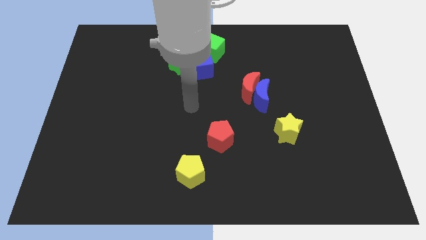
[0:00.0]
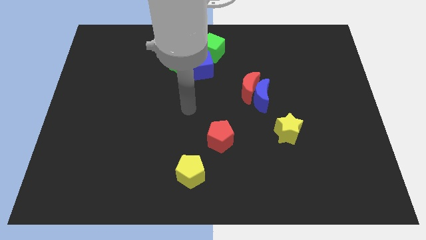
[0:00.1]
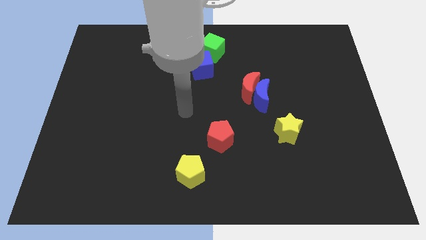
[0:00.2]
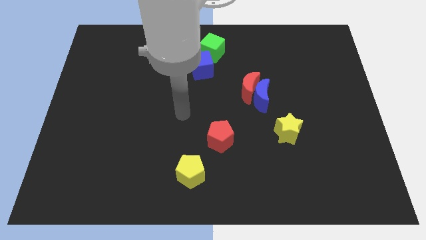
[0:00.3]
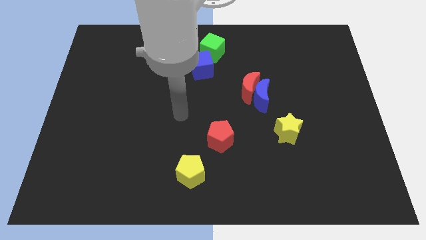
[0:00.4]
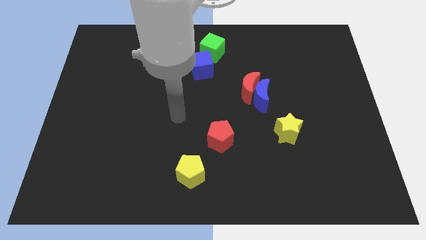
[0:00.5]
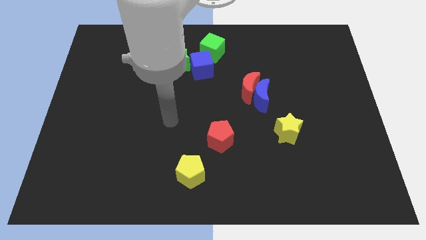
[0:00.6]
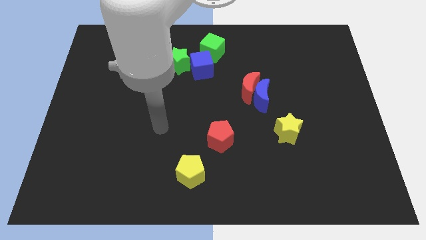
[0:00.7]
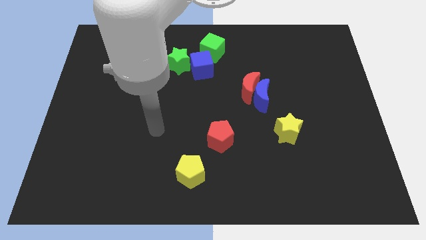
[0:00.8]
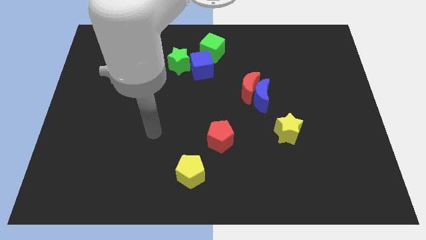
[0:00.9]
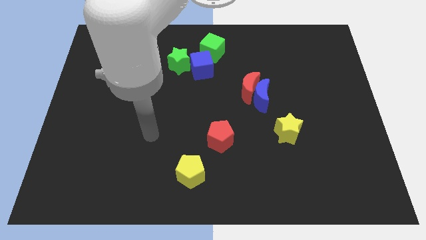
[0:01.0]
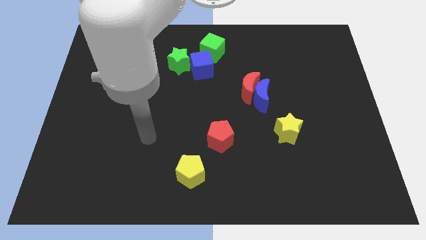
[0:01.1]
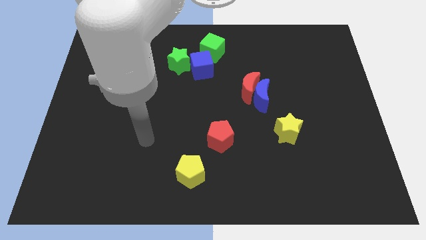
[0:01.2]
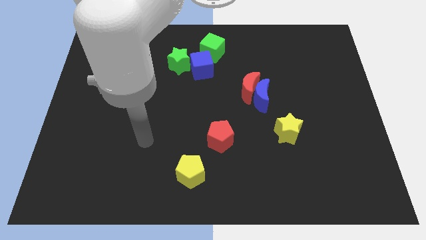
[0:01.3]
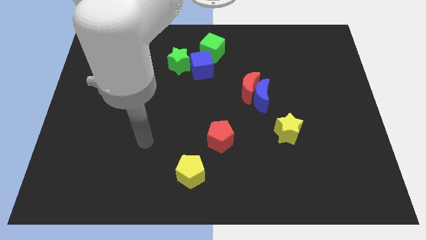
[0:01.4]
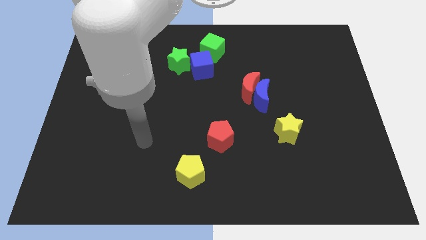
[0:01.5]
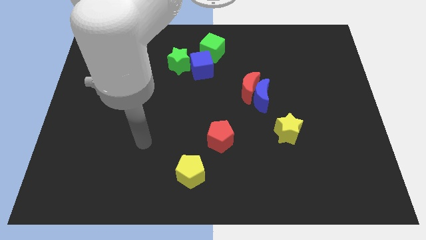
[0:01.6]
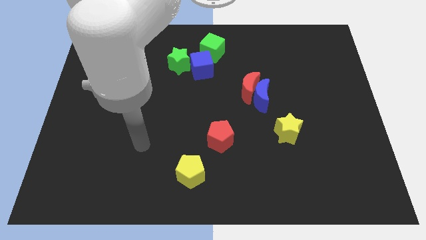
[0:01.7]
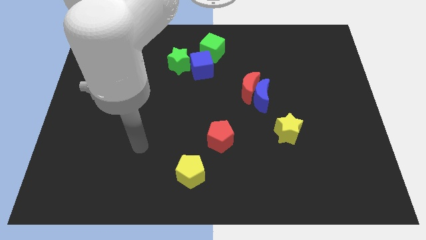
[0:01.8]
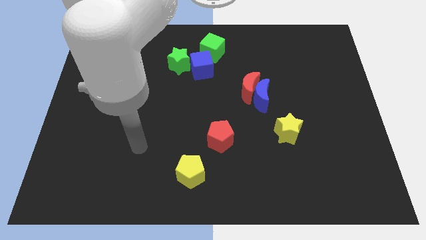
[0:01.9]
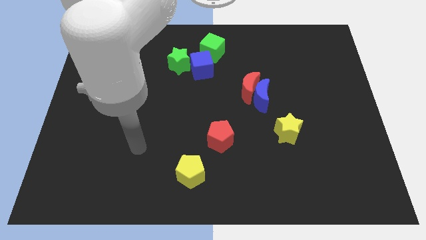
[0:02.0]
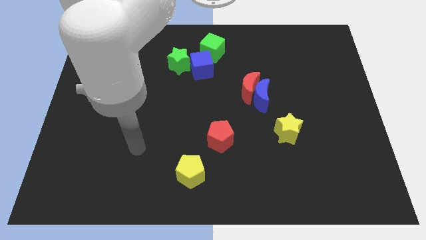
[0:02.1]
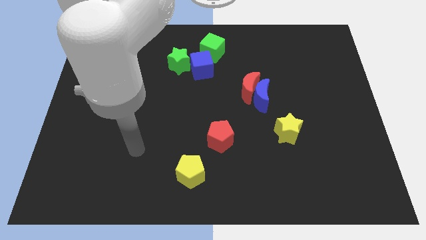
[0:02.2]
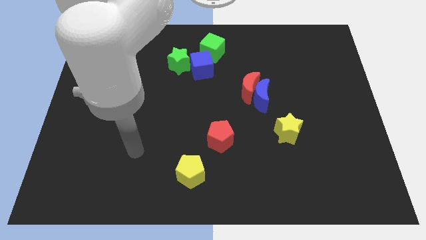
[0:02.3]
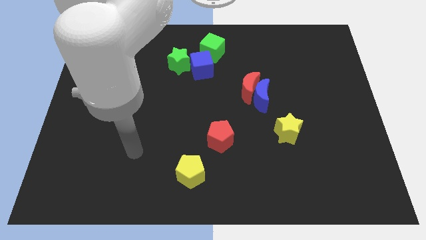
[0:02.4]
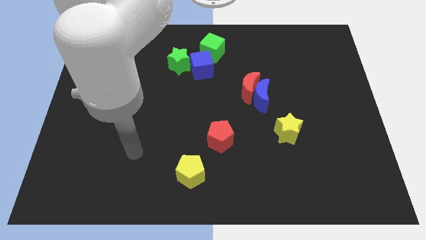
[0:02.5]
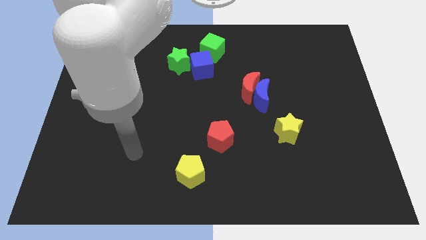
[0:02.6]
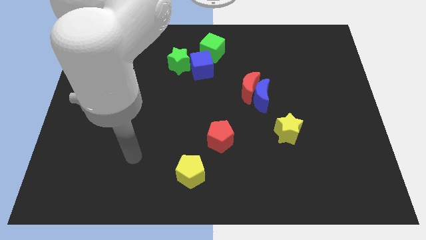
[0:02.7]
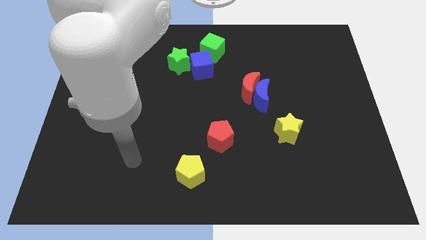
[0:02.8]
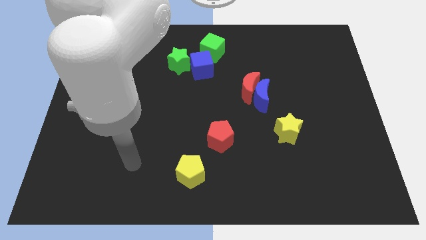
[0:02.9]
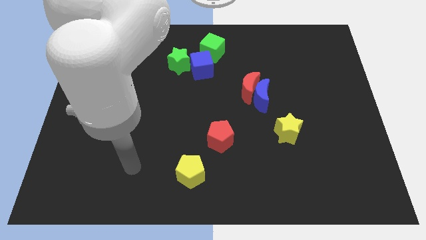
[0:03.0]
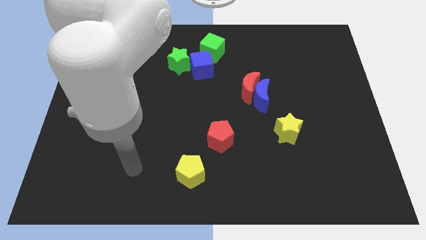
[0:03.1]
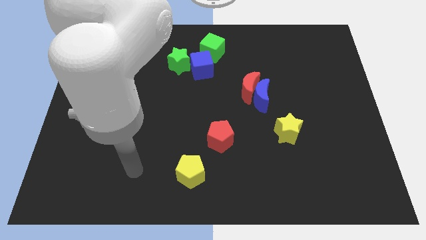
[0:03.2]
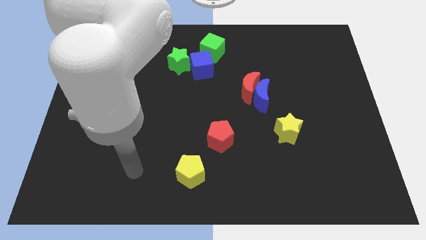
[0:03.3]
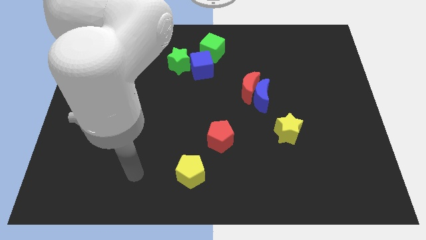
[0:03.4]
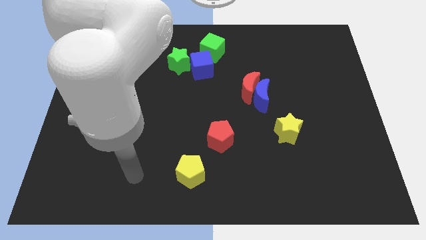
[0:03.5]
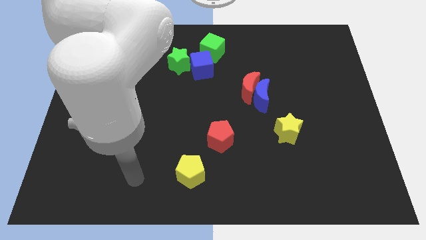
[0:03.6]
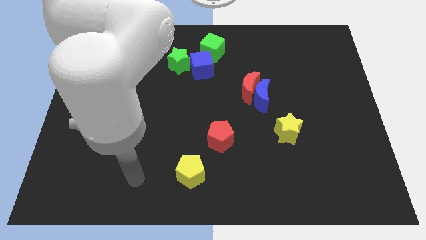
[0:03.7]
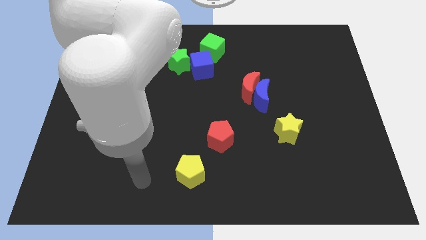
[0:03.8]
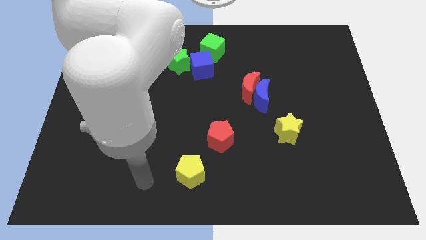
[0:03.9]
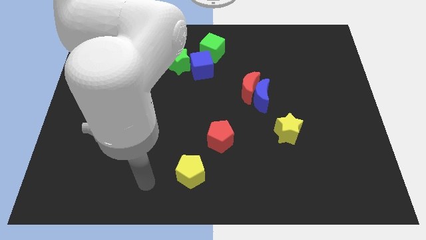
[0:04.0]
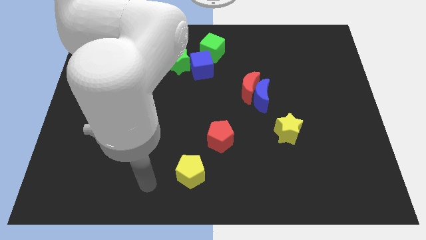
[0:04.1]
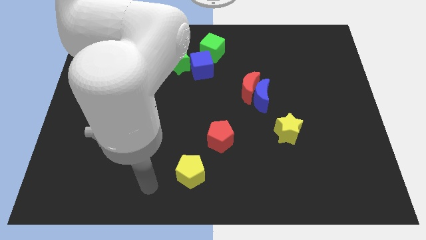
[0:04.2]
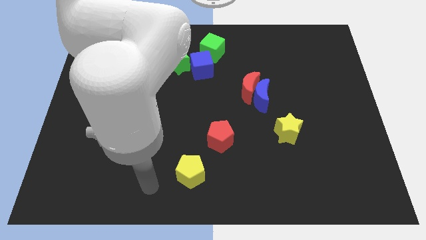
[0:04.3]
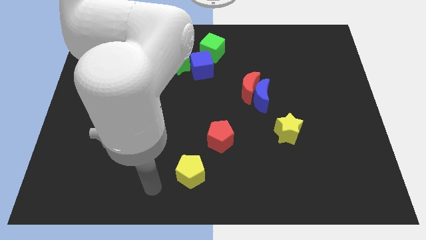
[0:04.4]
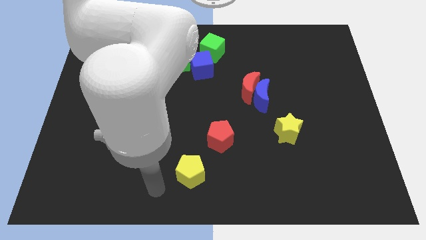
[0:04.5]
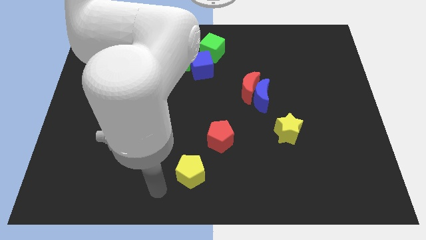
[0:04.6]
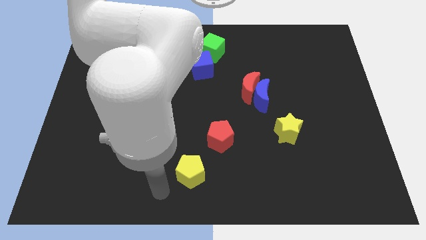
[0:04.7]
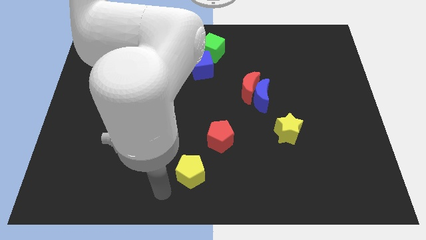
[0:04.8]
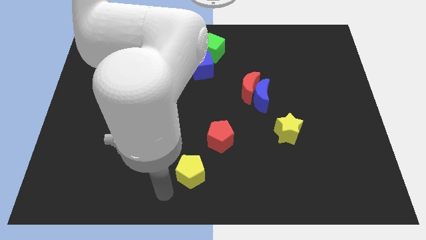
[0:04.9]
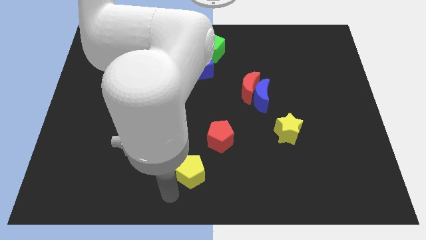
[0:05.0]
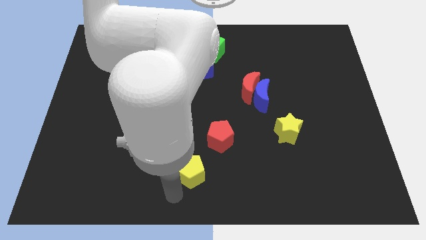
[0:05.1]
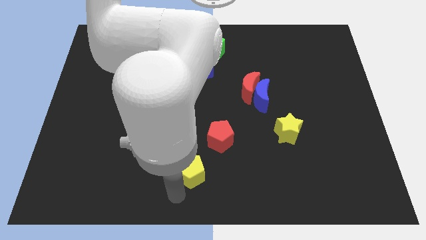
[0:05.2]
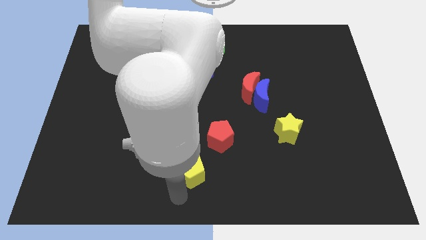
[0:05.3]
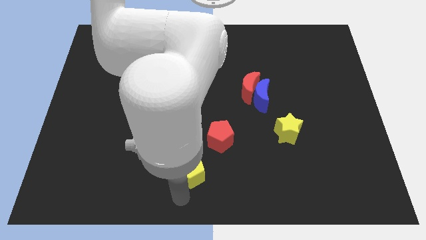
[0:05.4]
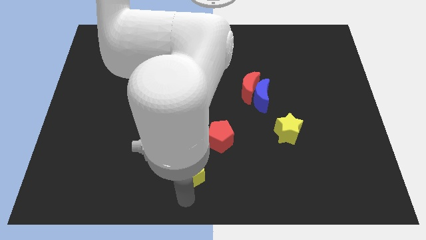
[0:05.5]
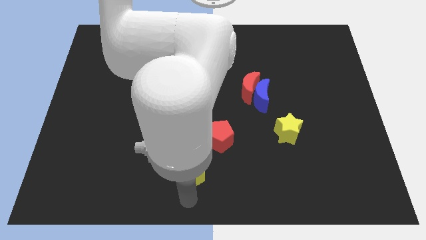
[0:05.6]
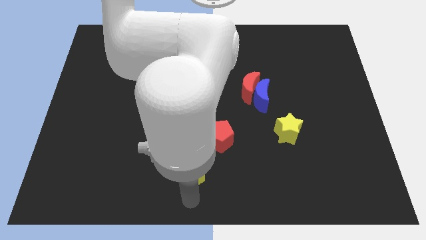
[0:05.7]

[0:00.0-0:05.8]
point your arm at the bottom of the yellow pentagon

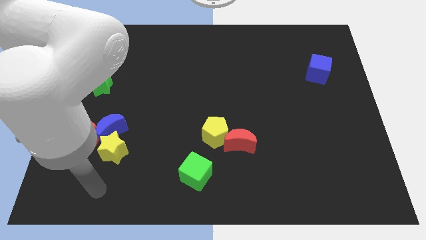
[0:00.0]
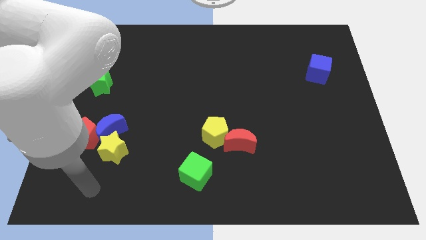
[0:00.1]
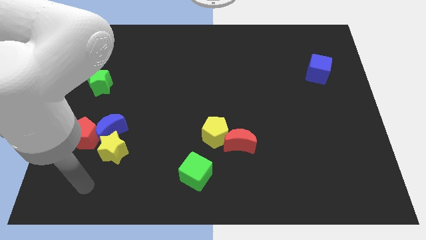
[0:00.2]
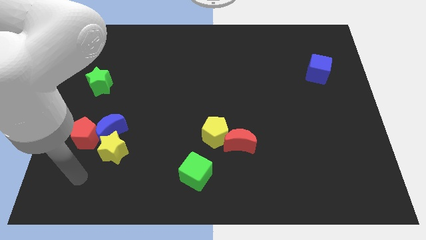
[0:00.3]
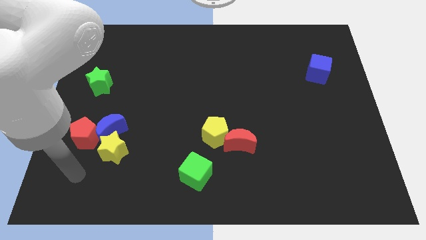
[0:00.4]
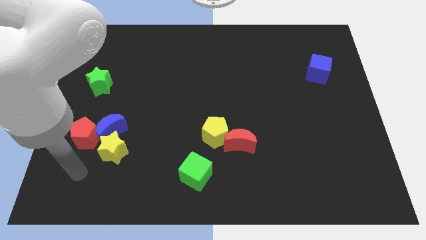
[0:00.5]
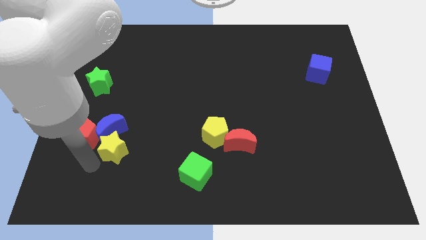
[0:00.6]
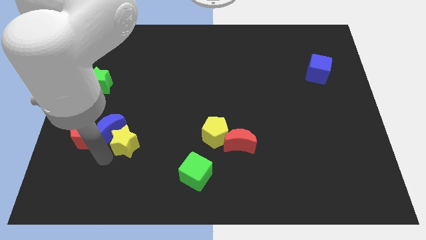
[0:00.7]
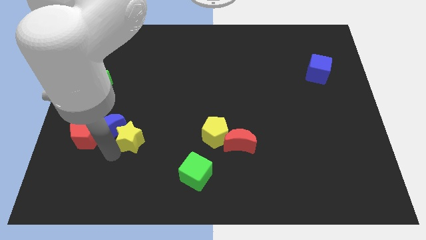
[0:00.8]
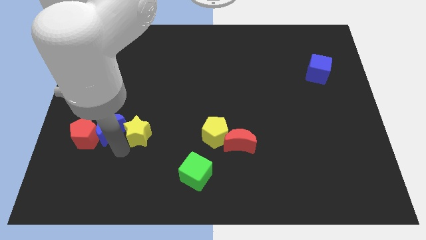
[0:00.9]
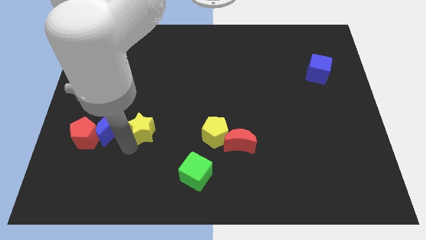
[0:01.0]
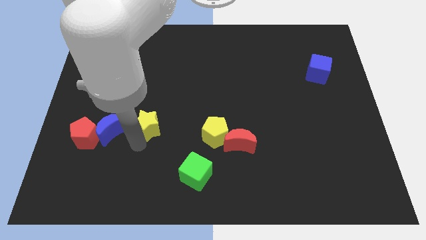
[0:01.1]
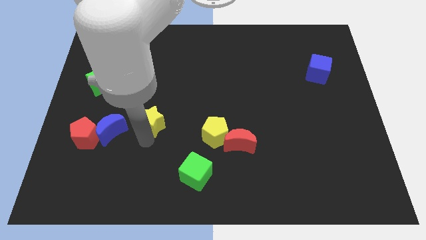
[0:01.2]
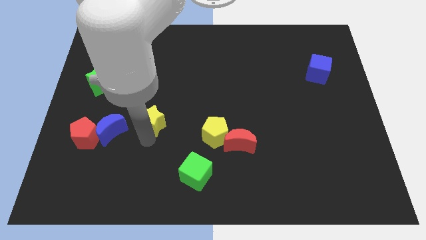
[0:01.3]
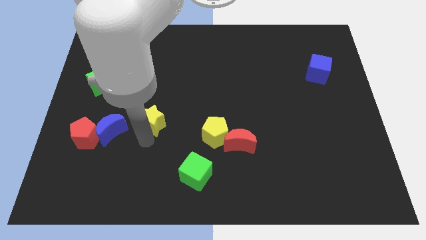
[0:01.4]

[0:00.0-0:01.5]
place the yellow star on the top right side of the blue moon

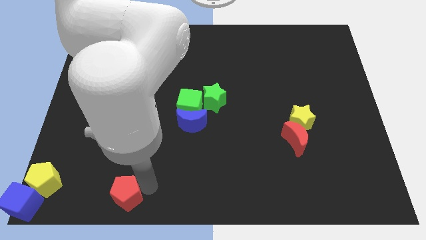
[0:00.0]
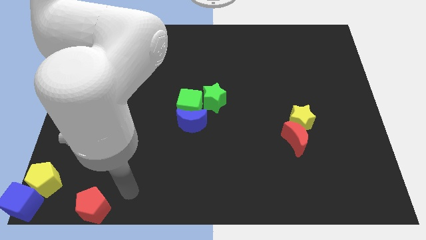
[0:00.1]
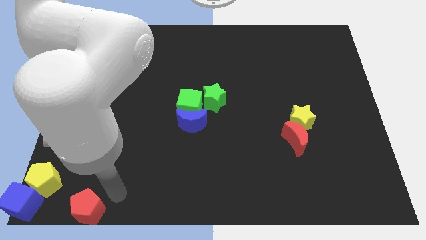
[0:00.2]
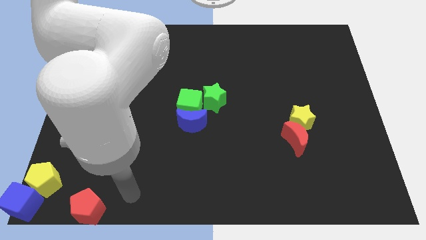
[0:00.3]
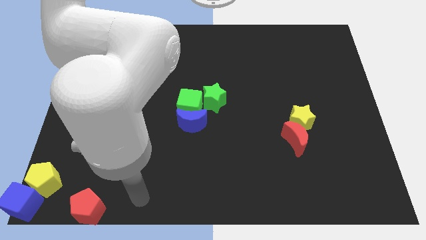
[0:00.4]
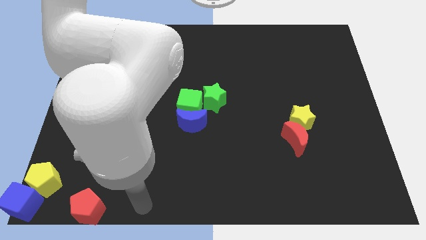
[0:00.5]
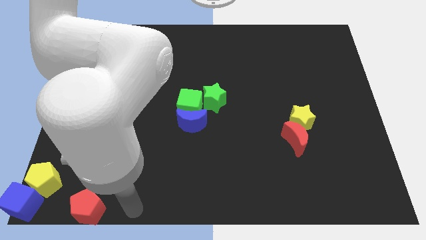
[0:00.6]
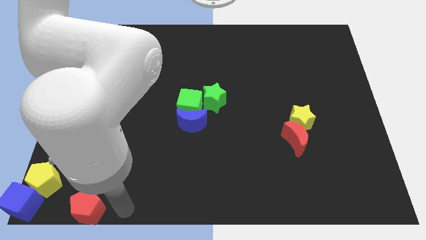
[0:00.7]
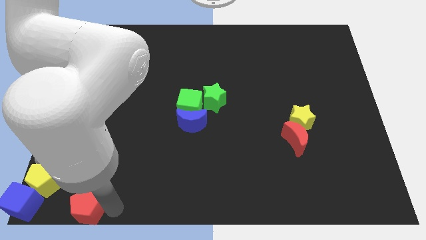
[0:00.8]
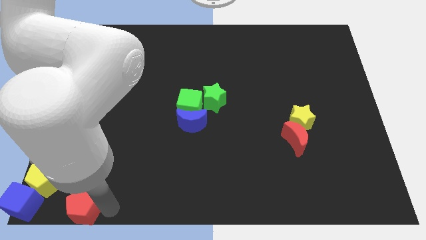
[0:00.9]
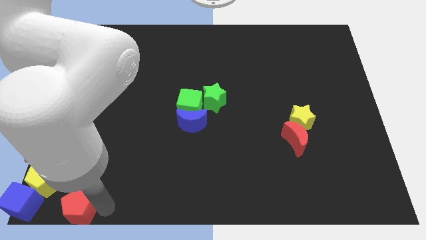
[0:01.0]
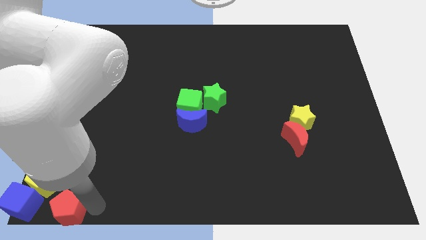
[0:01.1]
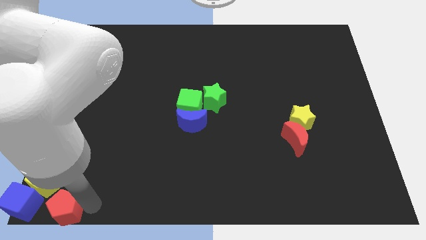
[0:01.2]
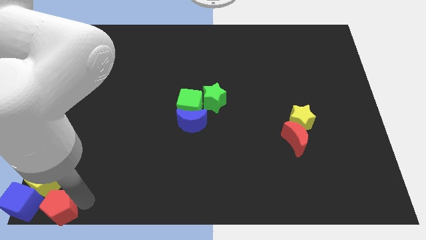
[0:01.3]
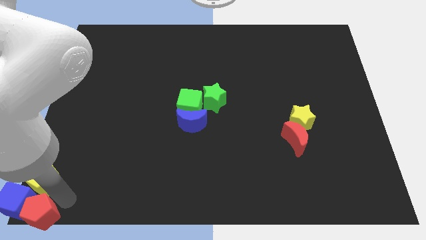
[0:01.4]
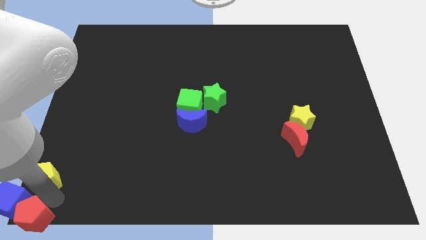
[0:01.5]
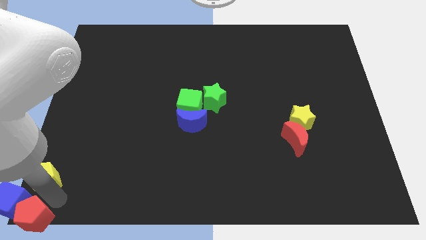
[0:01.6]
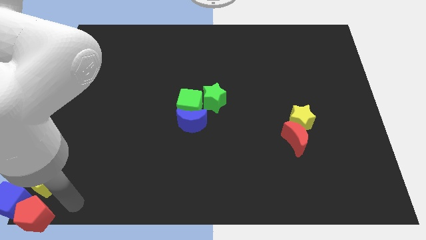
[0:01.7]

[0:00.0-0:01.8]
place yellow star below yellow pentagon
